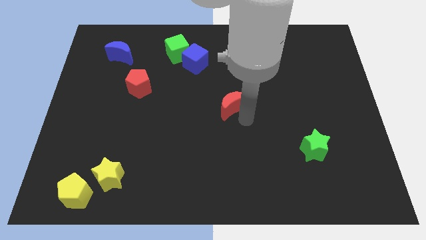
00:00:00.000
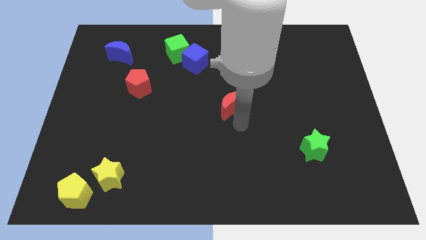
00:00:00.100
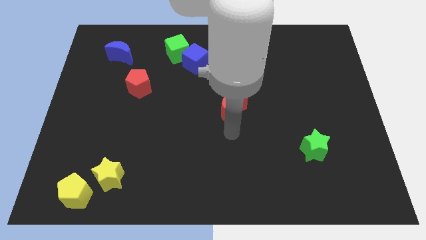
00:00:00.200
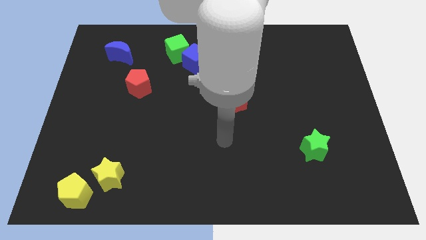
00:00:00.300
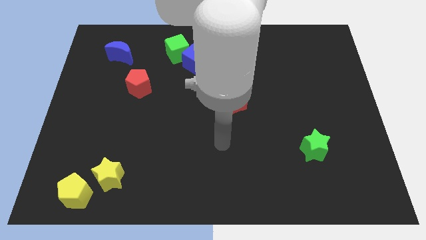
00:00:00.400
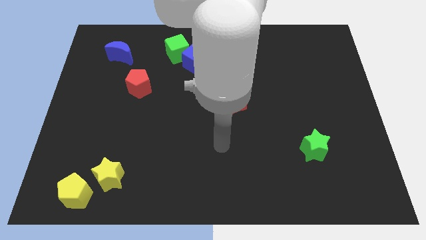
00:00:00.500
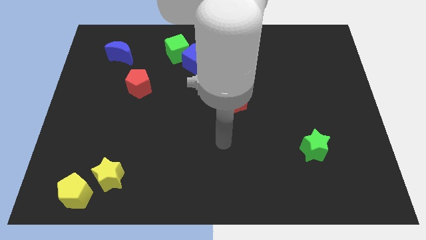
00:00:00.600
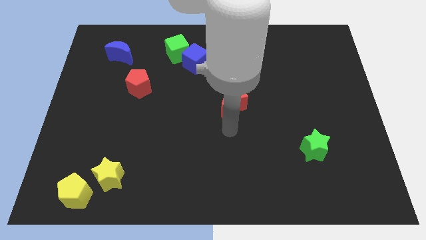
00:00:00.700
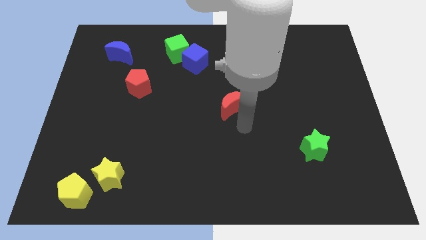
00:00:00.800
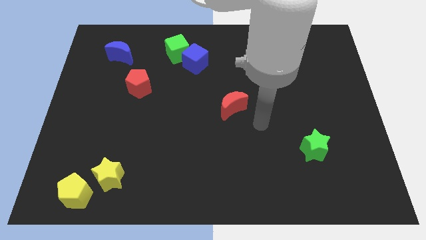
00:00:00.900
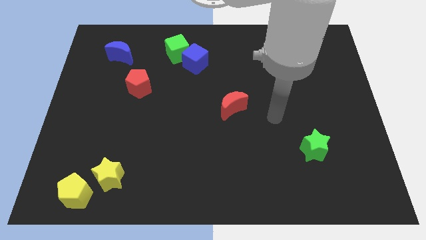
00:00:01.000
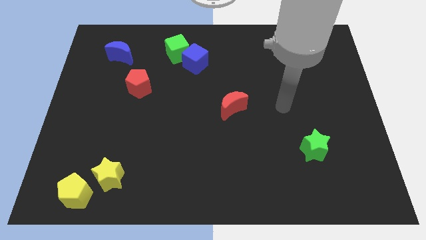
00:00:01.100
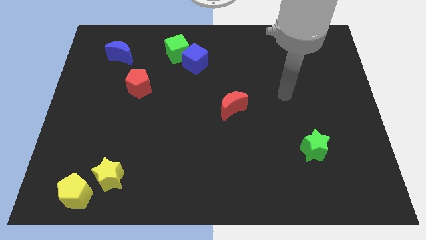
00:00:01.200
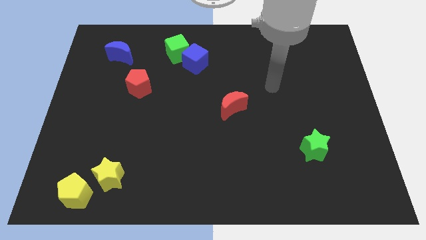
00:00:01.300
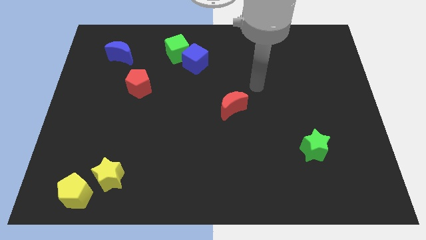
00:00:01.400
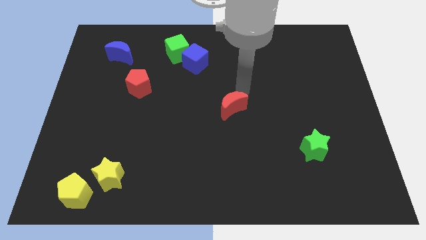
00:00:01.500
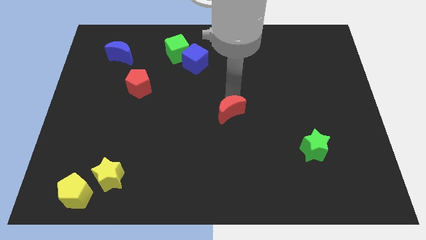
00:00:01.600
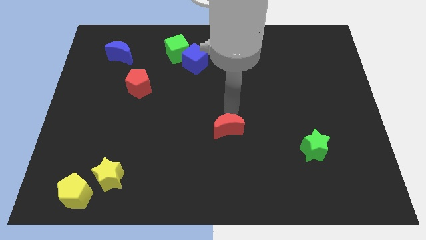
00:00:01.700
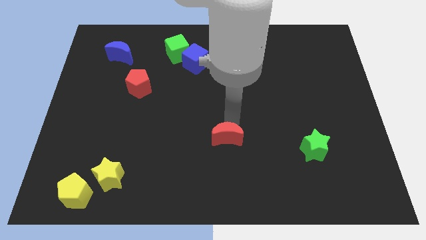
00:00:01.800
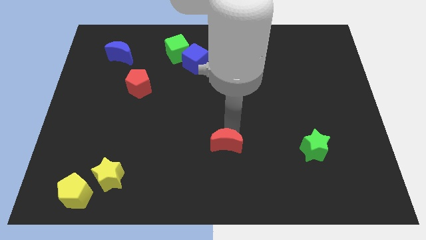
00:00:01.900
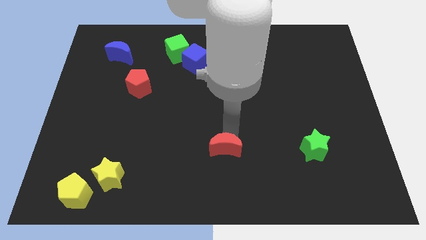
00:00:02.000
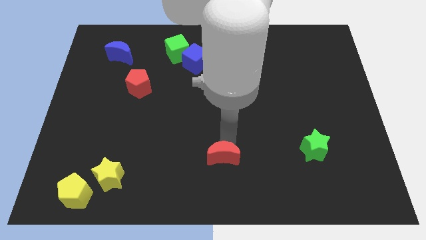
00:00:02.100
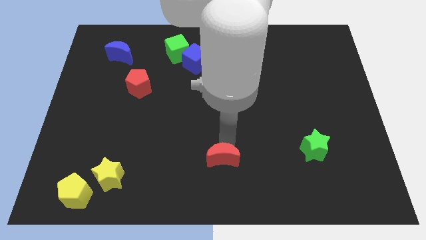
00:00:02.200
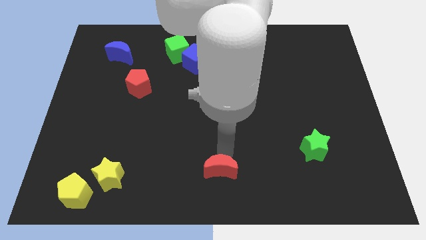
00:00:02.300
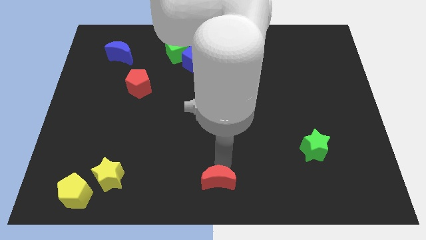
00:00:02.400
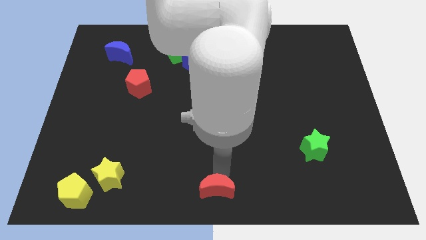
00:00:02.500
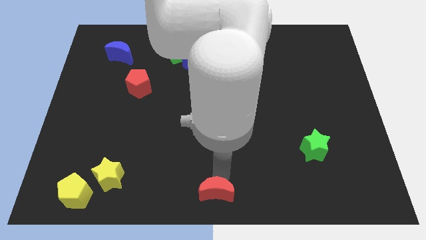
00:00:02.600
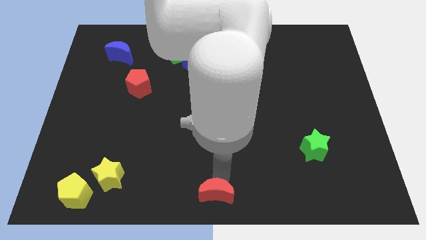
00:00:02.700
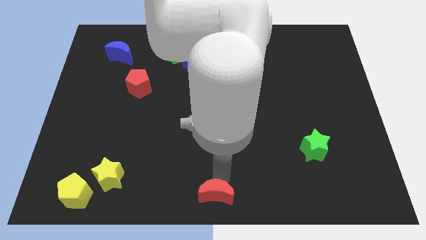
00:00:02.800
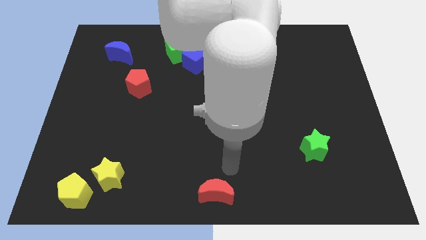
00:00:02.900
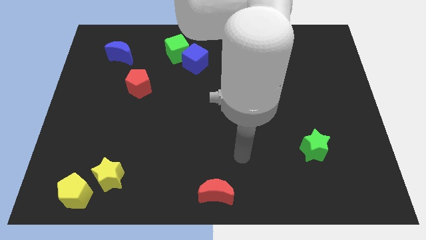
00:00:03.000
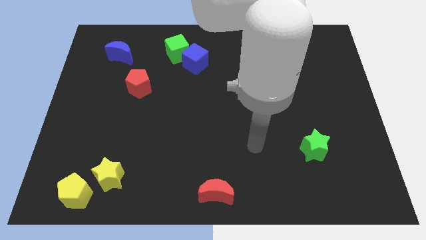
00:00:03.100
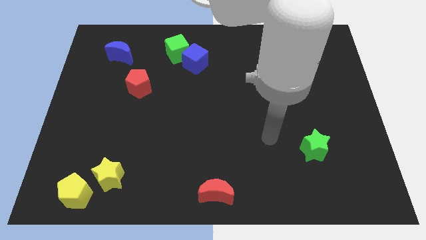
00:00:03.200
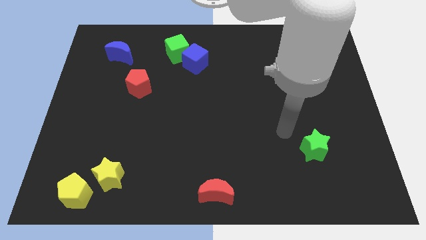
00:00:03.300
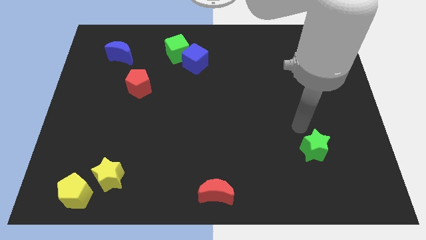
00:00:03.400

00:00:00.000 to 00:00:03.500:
push red crescent towards bottom center of the board

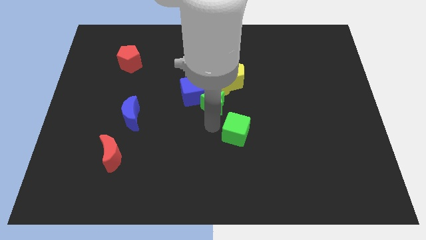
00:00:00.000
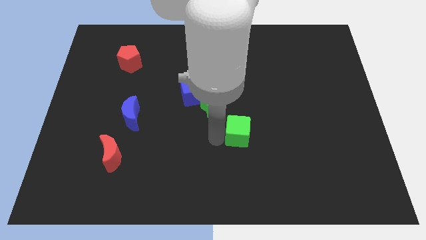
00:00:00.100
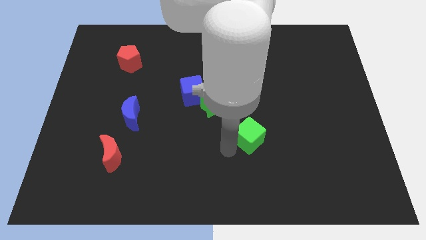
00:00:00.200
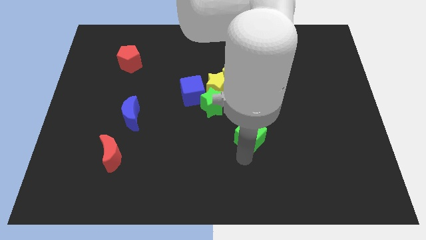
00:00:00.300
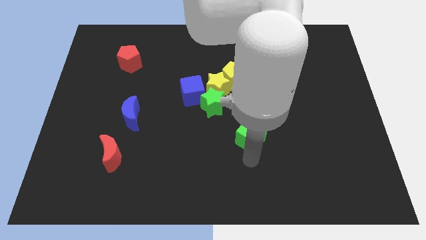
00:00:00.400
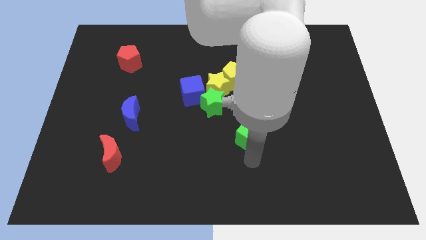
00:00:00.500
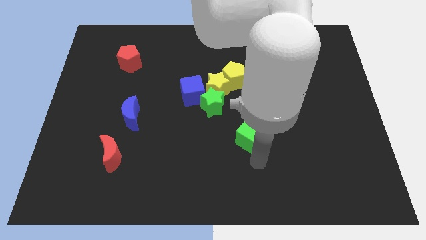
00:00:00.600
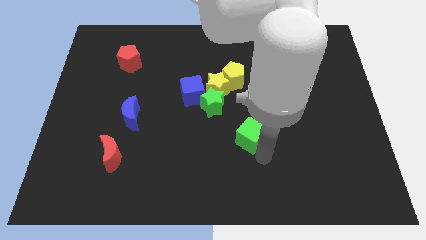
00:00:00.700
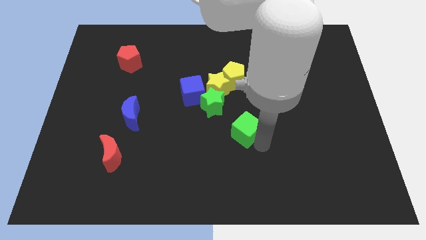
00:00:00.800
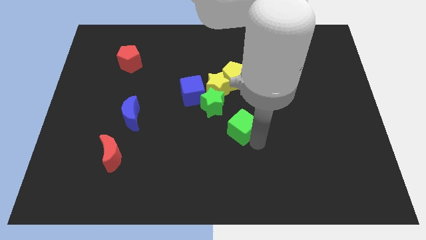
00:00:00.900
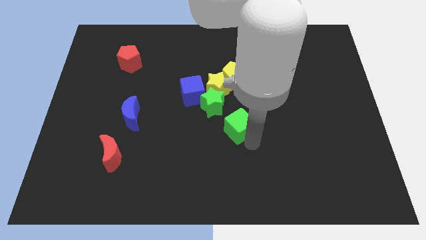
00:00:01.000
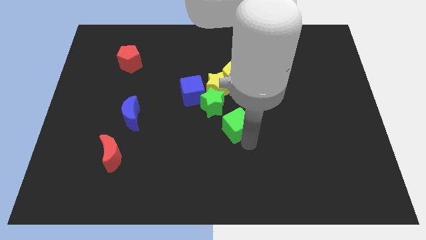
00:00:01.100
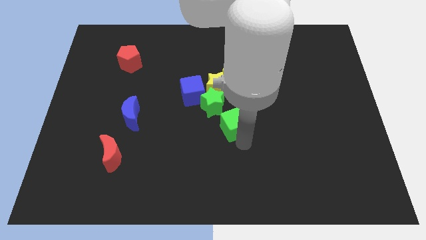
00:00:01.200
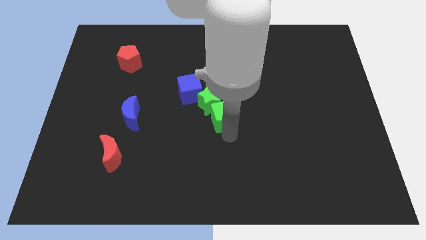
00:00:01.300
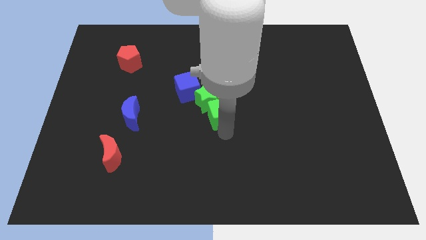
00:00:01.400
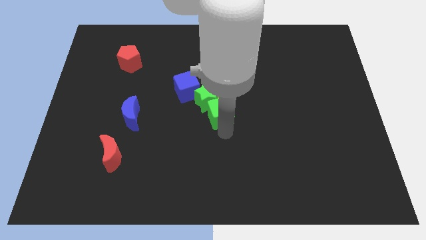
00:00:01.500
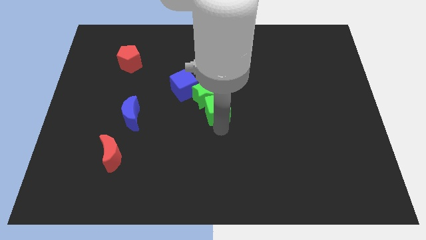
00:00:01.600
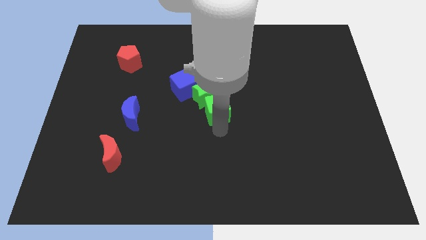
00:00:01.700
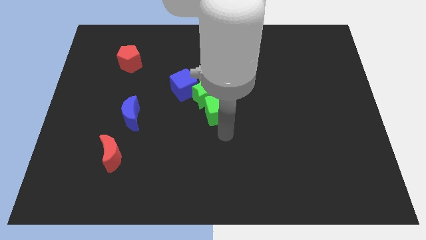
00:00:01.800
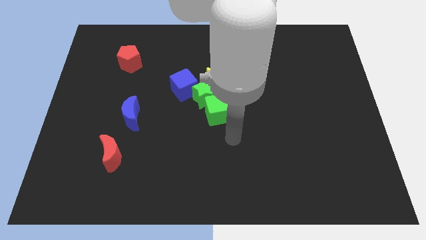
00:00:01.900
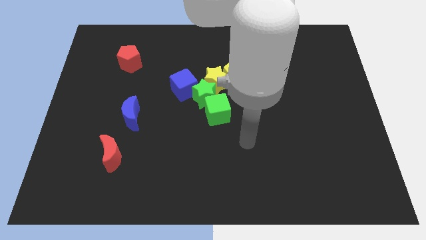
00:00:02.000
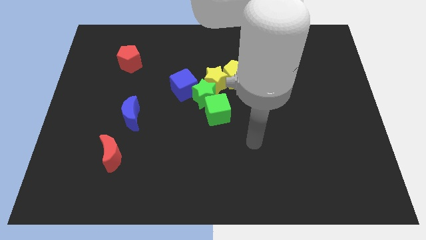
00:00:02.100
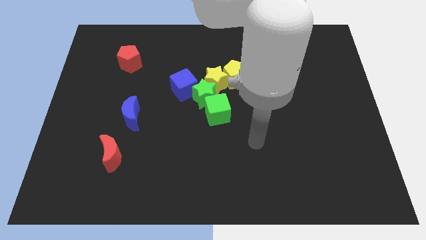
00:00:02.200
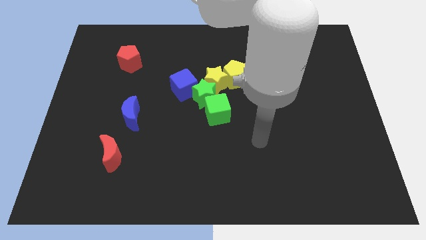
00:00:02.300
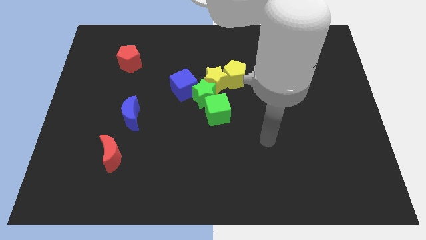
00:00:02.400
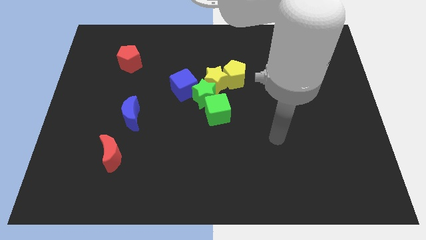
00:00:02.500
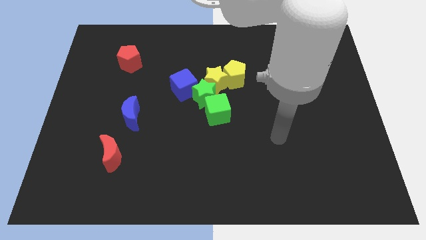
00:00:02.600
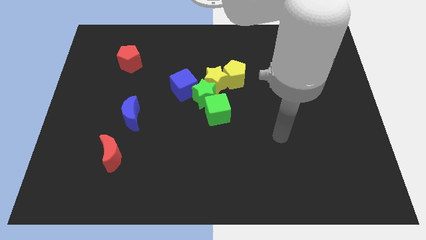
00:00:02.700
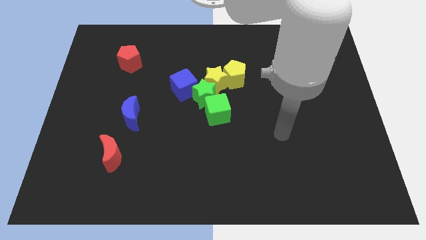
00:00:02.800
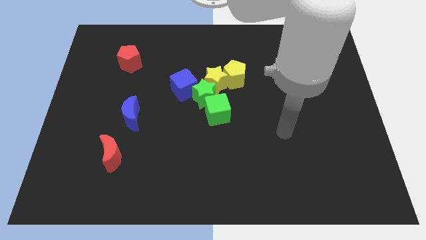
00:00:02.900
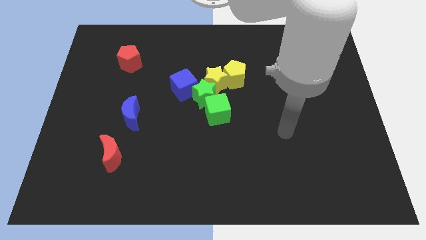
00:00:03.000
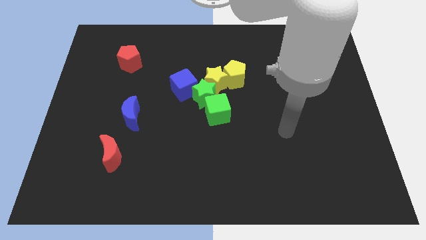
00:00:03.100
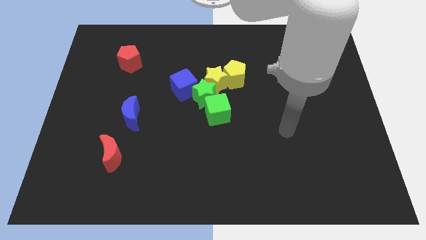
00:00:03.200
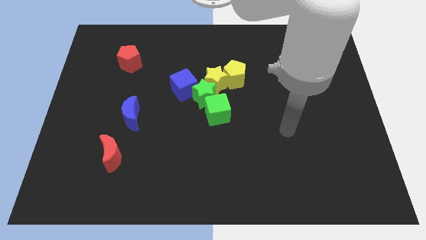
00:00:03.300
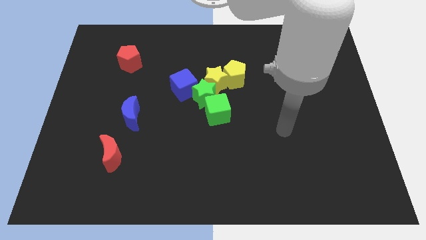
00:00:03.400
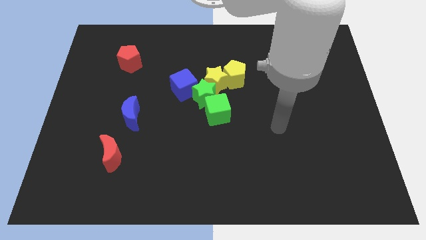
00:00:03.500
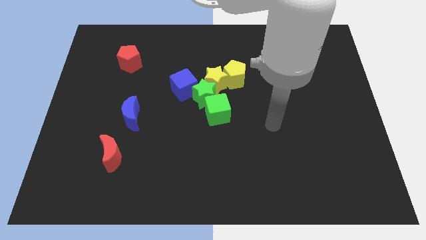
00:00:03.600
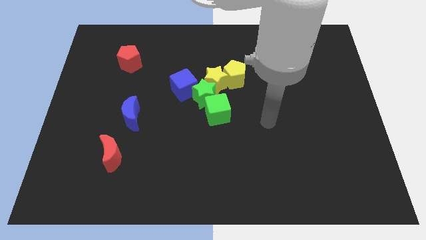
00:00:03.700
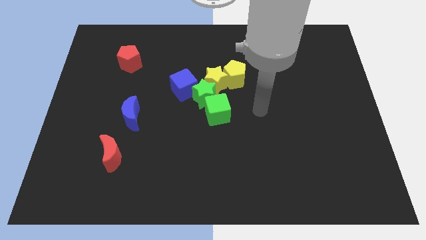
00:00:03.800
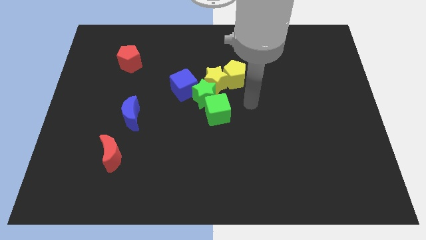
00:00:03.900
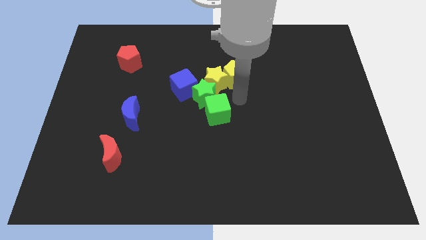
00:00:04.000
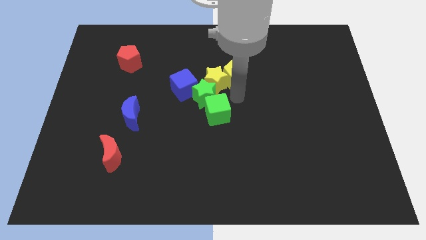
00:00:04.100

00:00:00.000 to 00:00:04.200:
push the green cube into the group of blocks

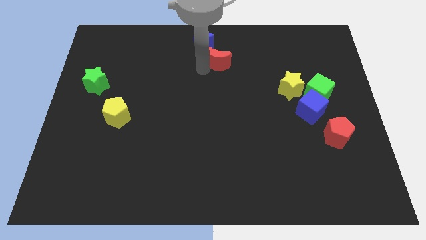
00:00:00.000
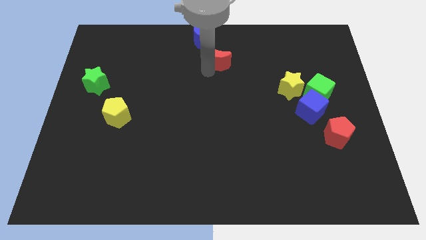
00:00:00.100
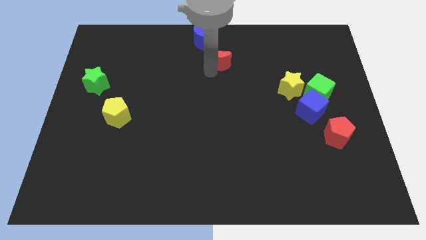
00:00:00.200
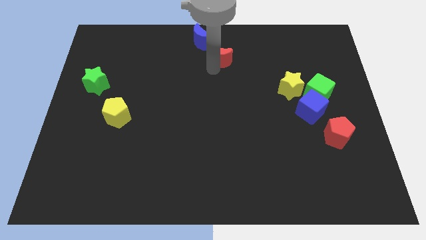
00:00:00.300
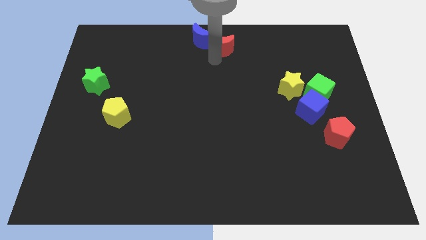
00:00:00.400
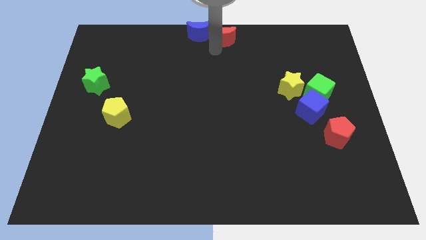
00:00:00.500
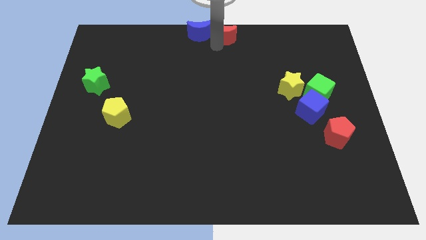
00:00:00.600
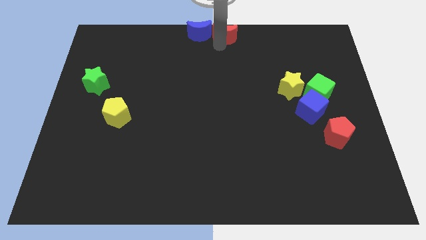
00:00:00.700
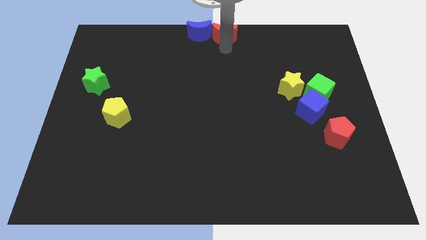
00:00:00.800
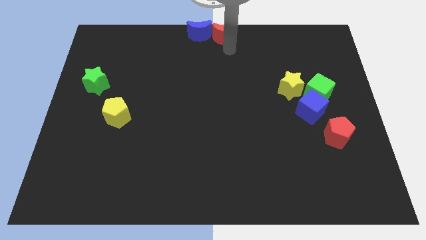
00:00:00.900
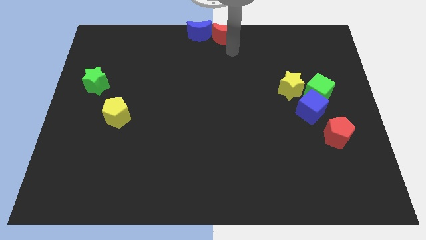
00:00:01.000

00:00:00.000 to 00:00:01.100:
push the red moon into the blue moon

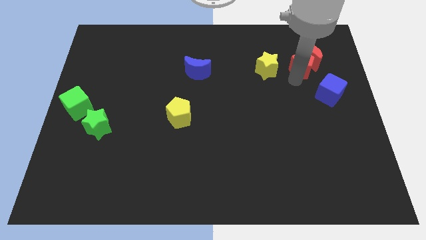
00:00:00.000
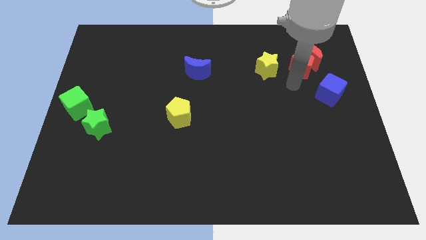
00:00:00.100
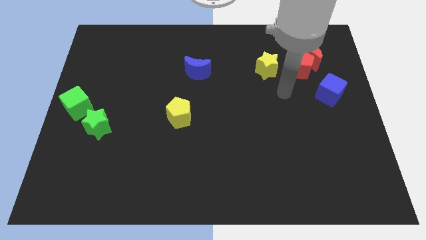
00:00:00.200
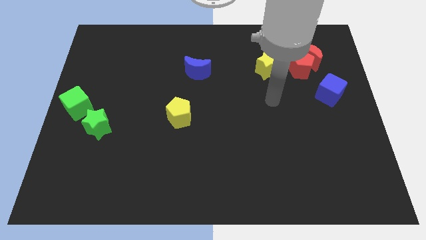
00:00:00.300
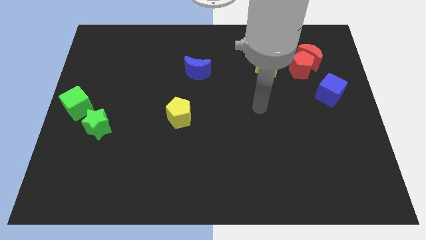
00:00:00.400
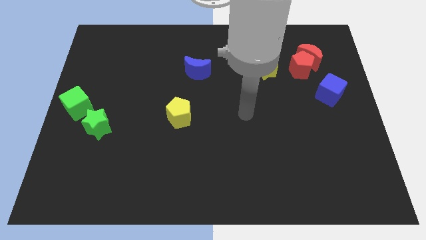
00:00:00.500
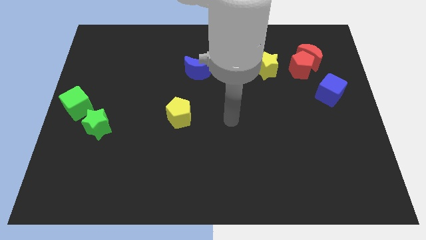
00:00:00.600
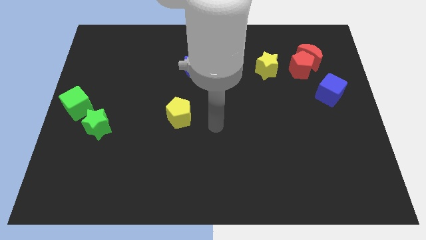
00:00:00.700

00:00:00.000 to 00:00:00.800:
move the arm away from the red pentagon
